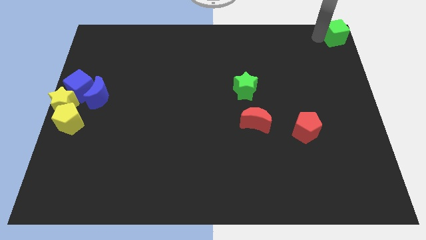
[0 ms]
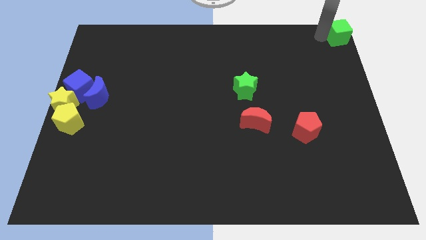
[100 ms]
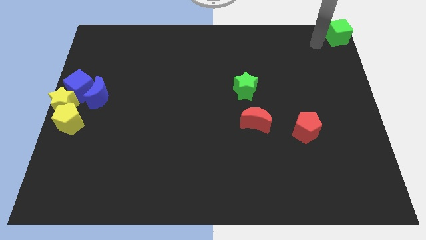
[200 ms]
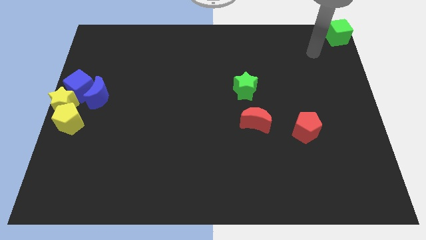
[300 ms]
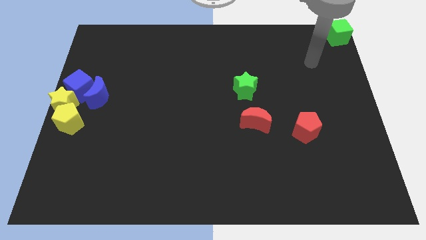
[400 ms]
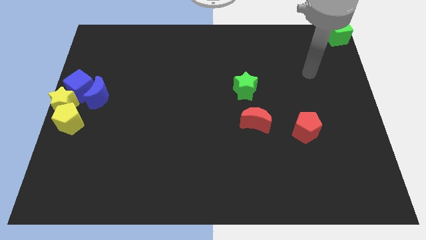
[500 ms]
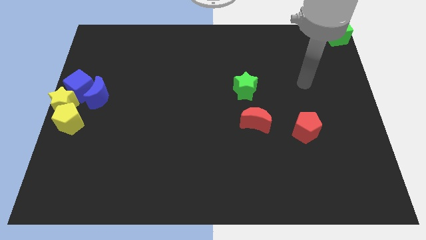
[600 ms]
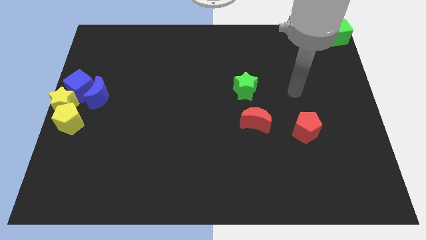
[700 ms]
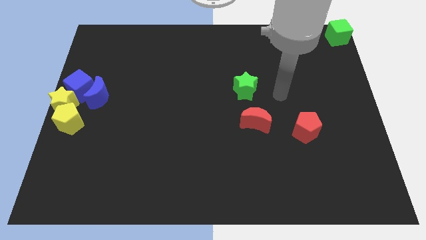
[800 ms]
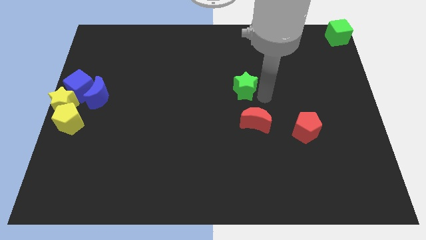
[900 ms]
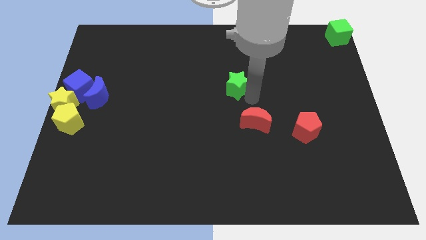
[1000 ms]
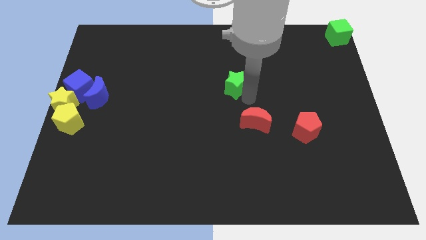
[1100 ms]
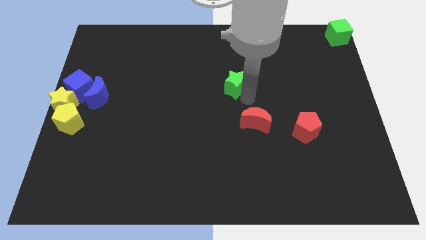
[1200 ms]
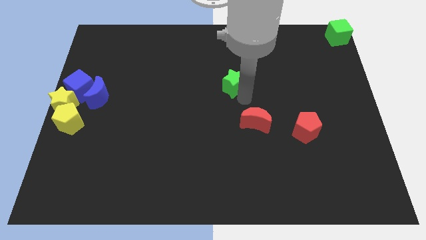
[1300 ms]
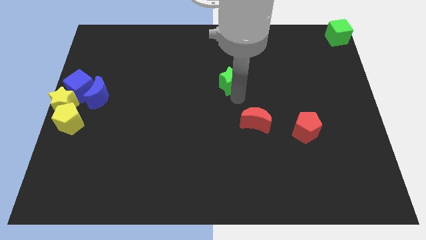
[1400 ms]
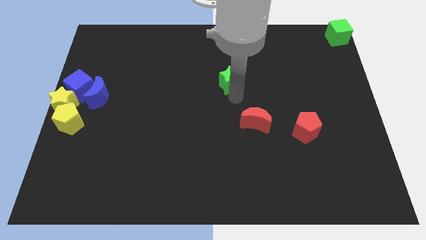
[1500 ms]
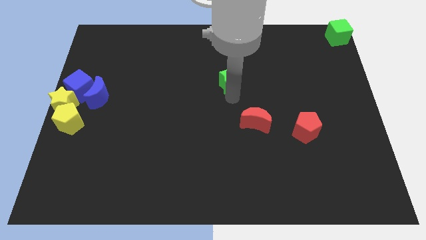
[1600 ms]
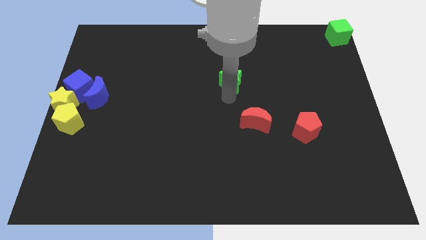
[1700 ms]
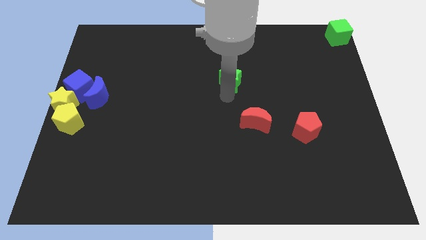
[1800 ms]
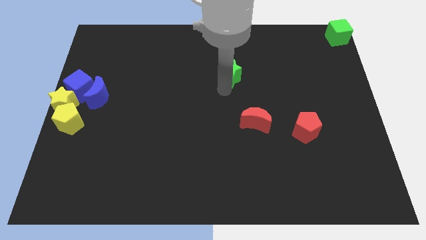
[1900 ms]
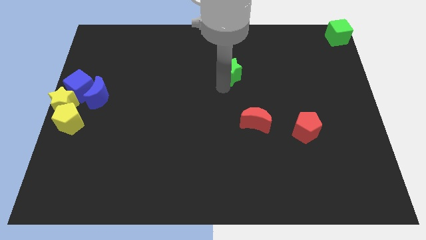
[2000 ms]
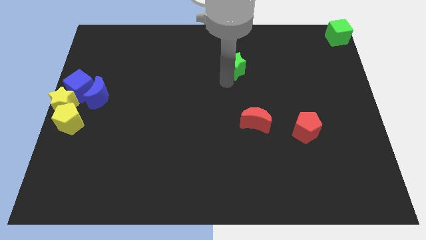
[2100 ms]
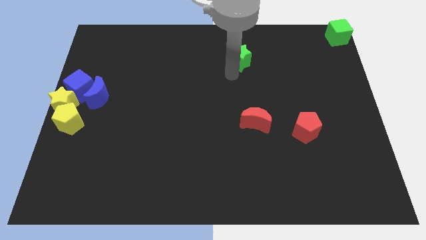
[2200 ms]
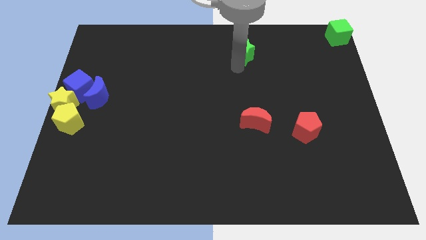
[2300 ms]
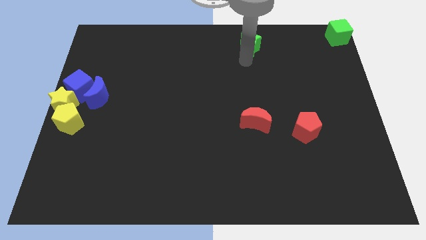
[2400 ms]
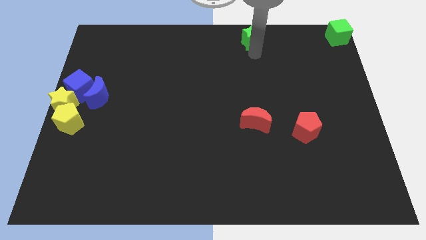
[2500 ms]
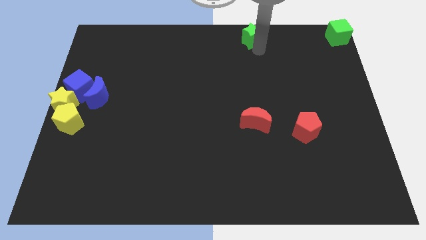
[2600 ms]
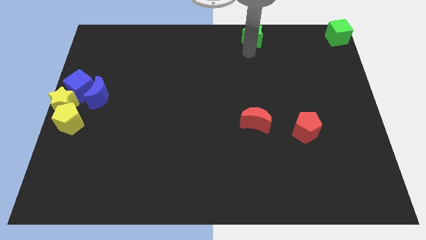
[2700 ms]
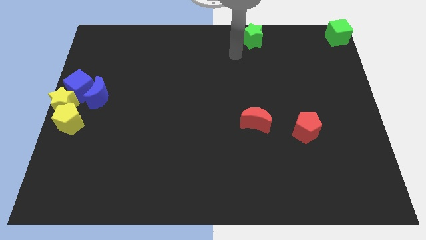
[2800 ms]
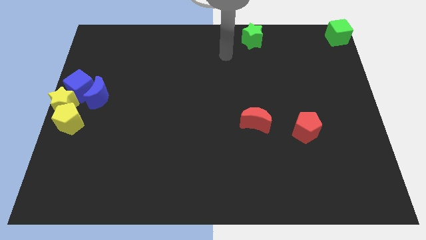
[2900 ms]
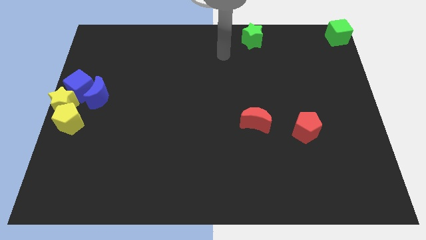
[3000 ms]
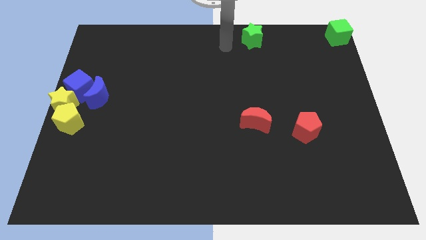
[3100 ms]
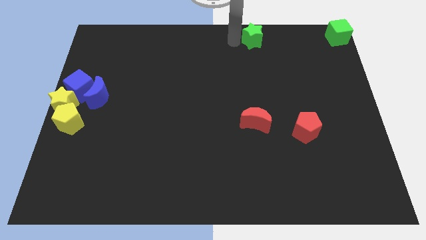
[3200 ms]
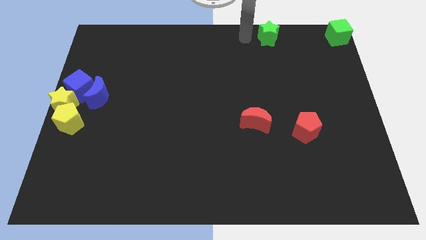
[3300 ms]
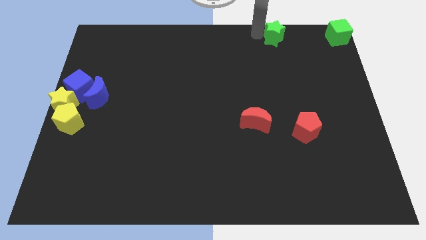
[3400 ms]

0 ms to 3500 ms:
place the green star left to the green cube

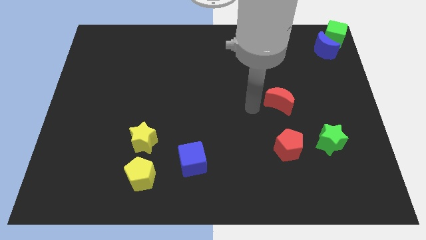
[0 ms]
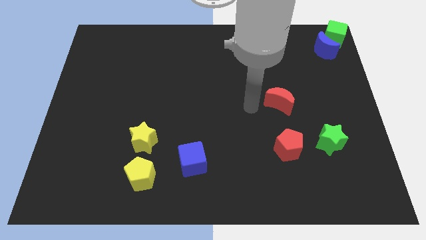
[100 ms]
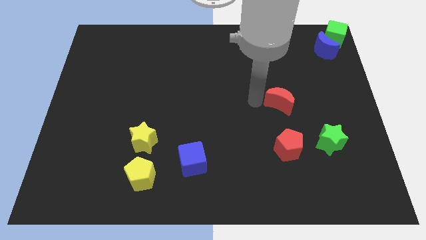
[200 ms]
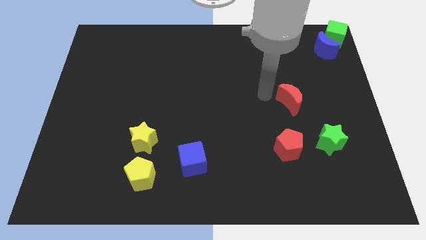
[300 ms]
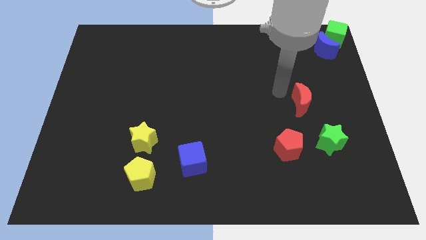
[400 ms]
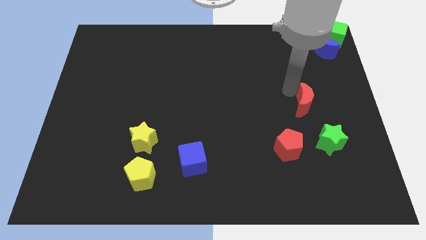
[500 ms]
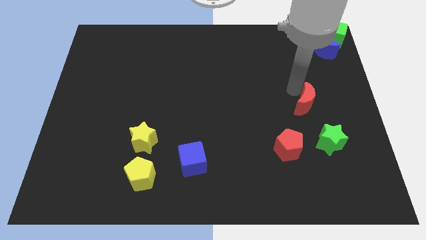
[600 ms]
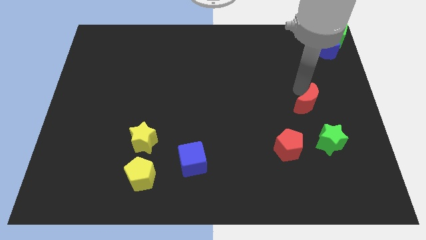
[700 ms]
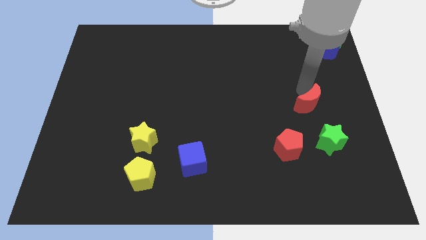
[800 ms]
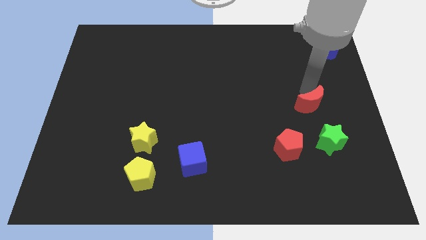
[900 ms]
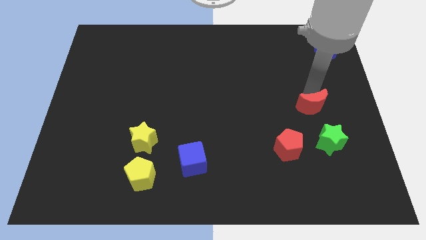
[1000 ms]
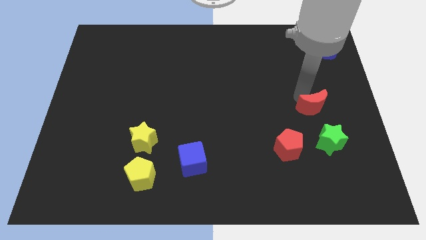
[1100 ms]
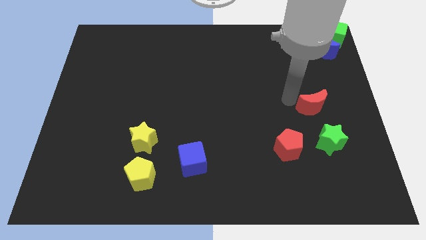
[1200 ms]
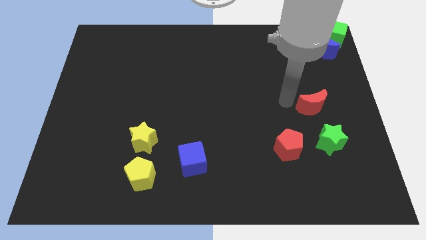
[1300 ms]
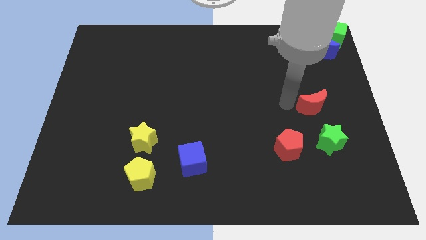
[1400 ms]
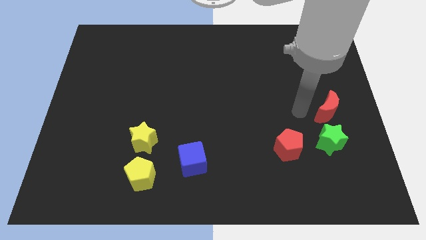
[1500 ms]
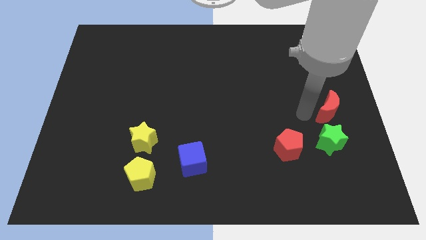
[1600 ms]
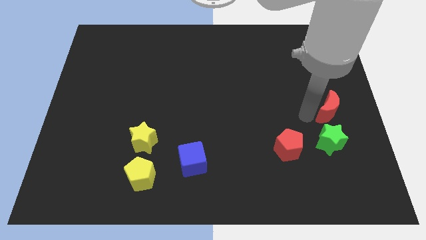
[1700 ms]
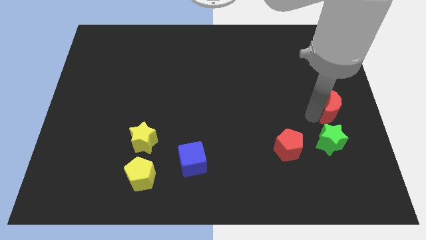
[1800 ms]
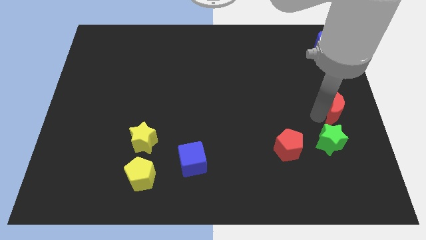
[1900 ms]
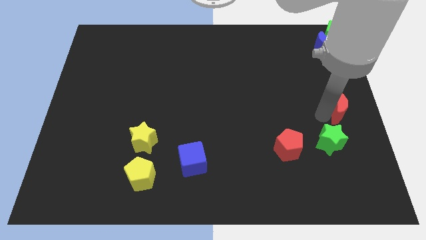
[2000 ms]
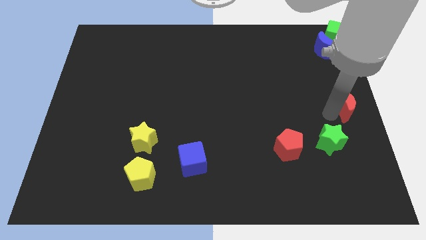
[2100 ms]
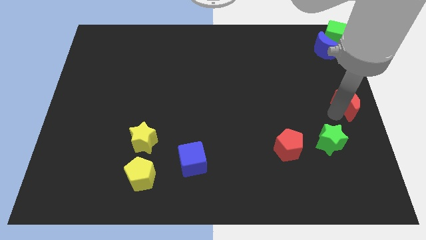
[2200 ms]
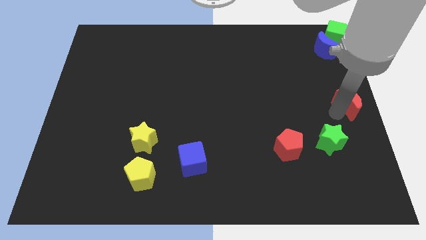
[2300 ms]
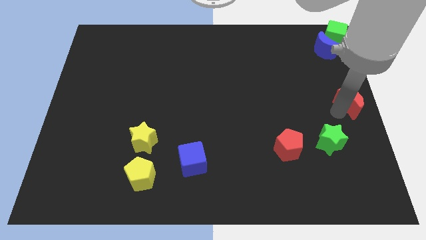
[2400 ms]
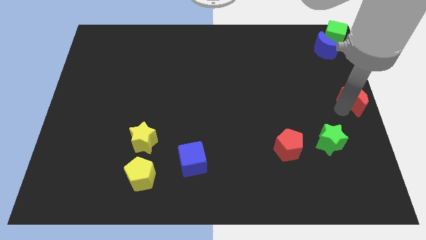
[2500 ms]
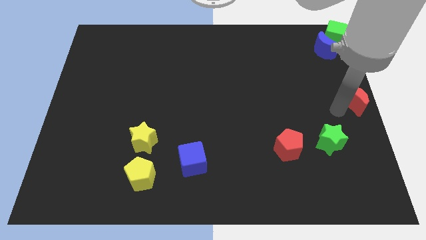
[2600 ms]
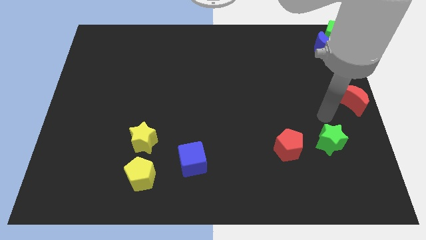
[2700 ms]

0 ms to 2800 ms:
place the red crescent diagonal above the green star

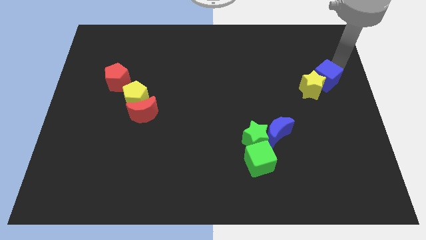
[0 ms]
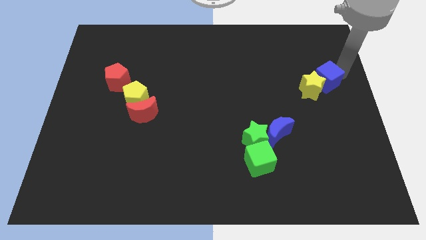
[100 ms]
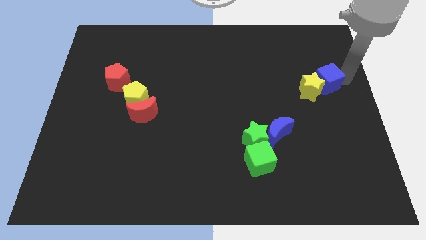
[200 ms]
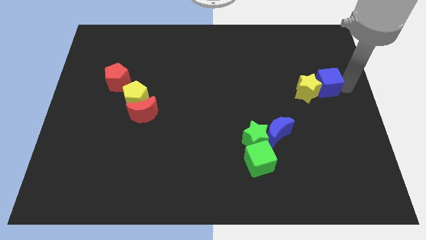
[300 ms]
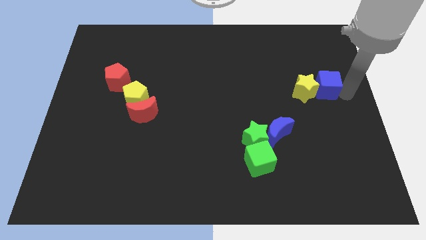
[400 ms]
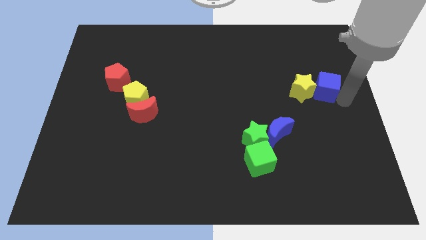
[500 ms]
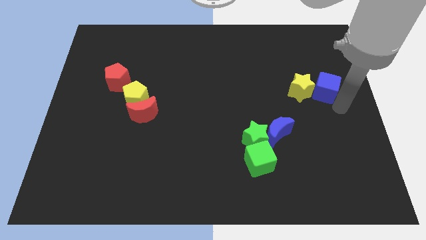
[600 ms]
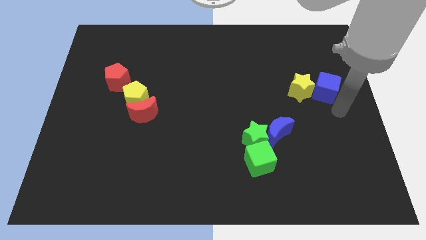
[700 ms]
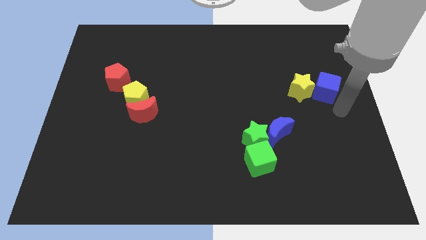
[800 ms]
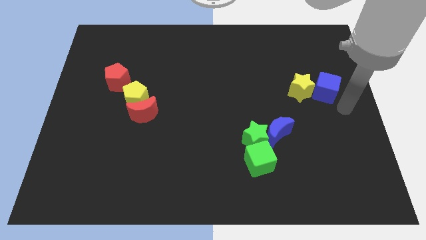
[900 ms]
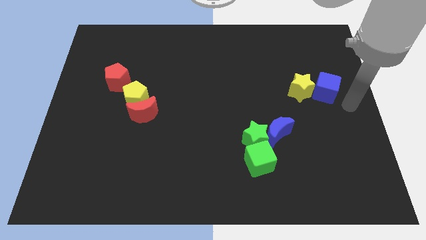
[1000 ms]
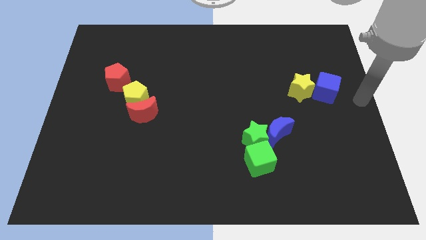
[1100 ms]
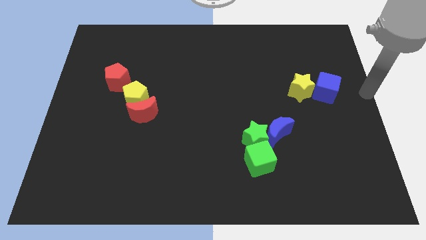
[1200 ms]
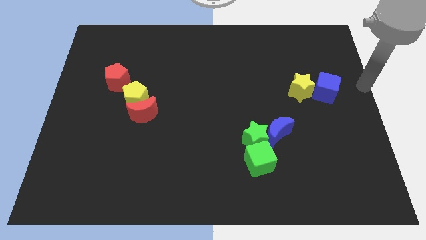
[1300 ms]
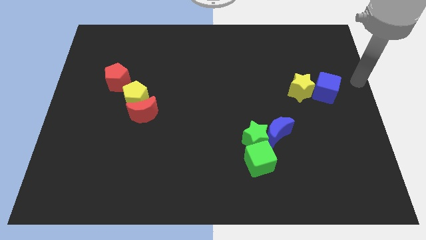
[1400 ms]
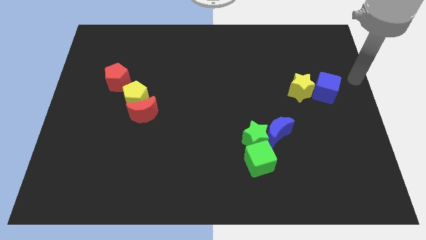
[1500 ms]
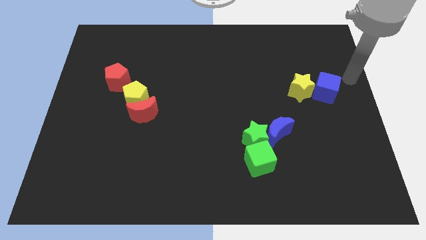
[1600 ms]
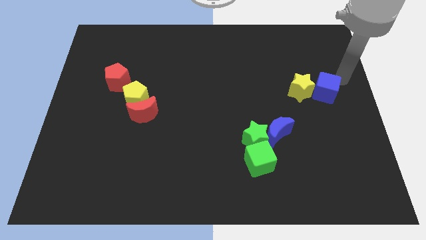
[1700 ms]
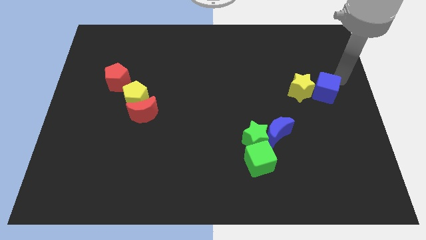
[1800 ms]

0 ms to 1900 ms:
move the blue cube and the yellow star slightly towards down

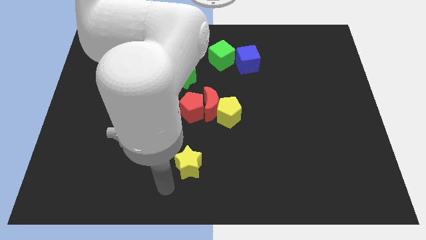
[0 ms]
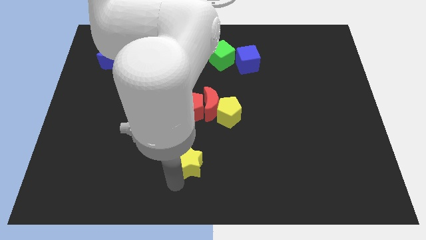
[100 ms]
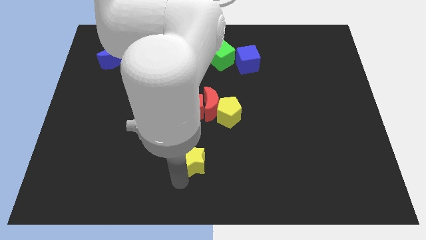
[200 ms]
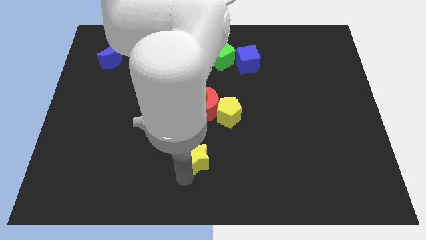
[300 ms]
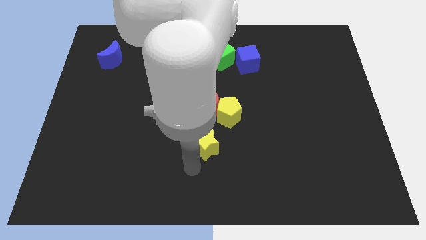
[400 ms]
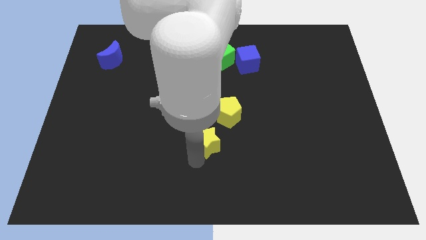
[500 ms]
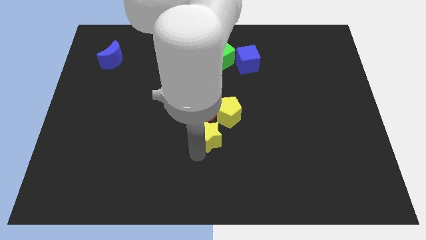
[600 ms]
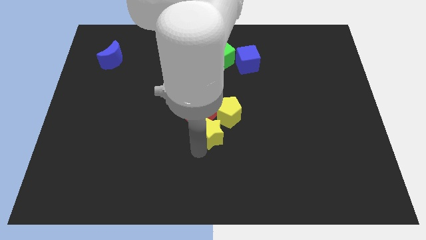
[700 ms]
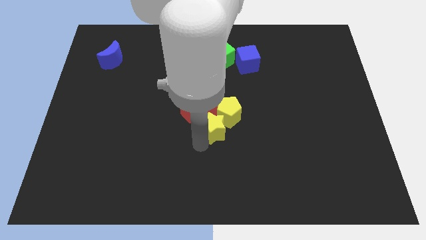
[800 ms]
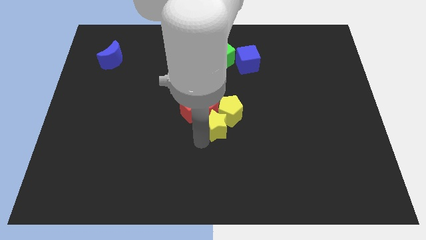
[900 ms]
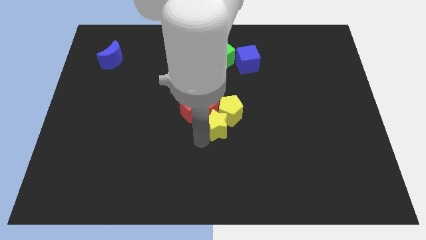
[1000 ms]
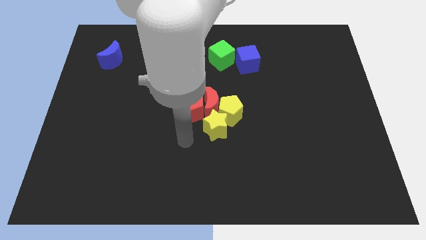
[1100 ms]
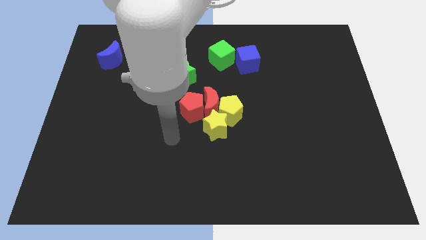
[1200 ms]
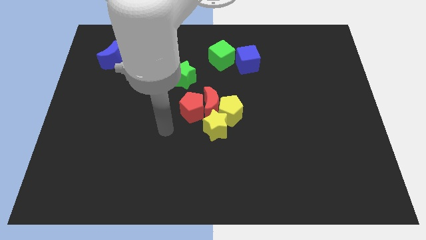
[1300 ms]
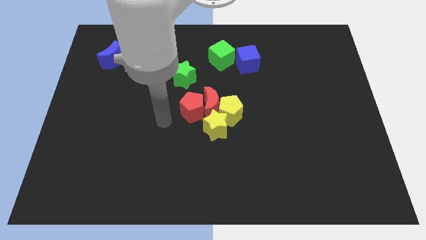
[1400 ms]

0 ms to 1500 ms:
push the yellow star into the yellow pentagon
